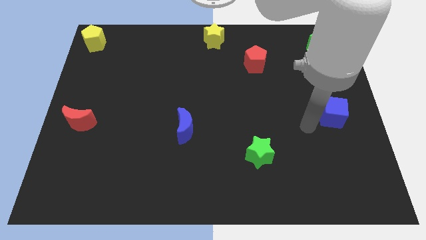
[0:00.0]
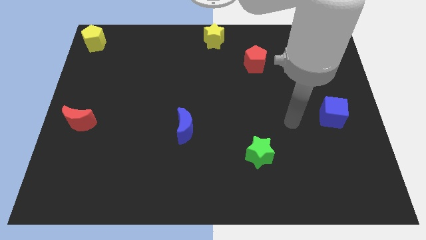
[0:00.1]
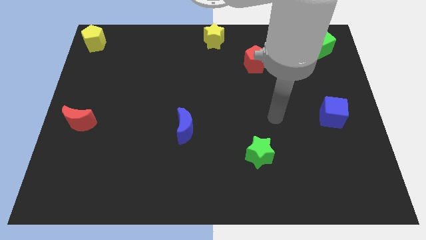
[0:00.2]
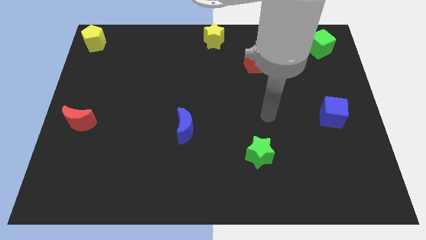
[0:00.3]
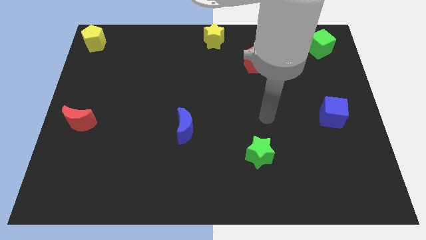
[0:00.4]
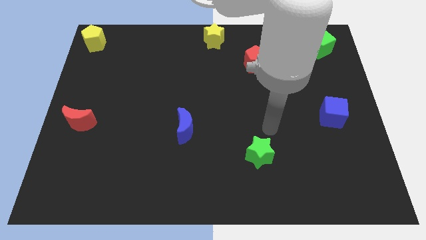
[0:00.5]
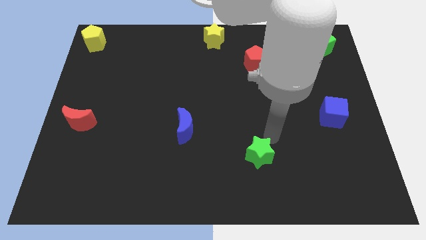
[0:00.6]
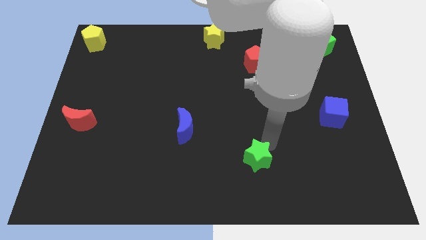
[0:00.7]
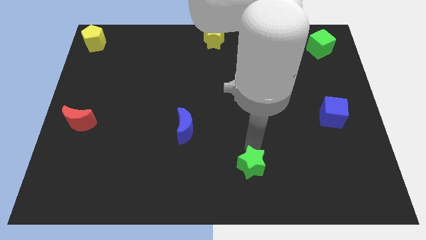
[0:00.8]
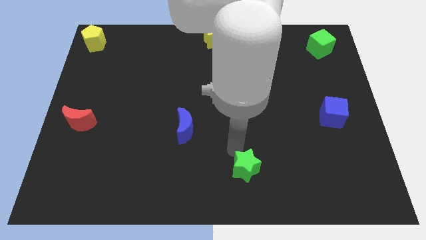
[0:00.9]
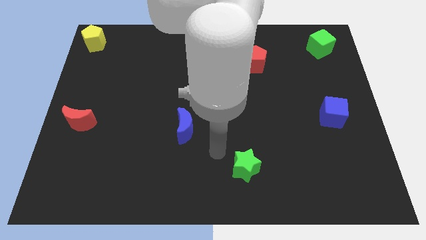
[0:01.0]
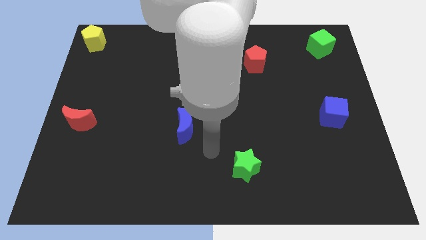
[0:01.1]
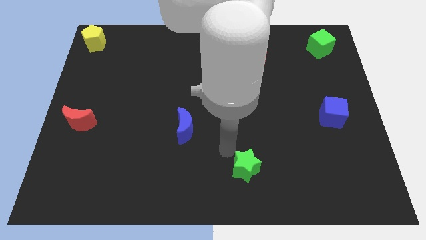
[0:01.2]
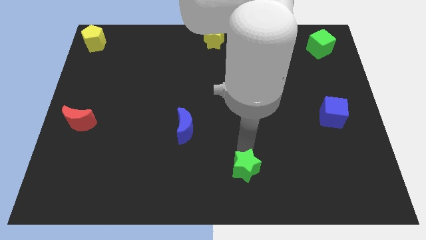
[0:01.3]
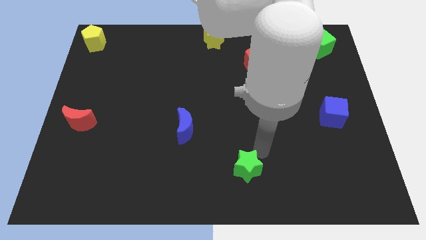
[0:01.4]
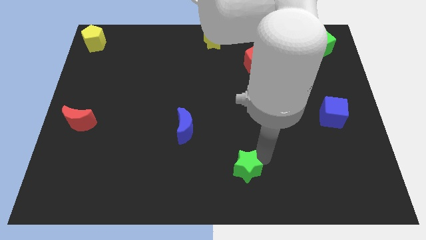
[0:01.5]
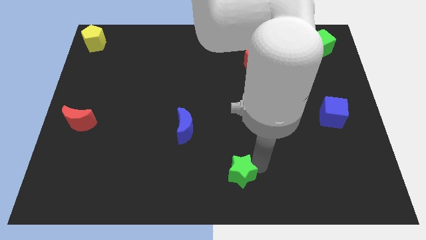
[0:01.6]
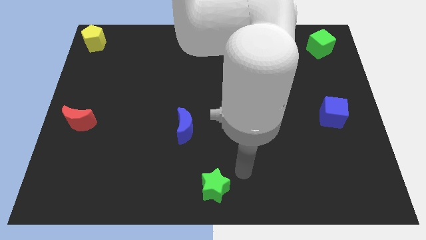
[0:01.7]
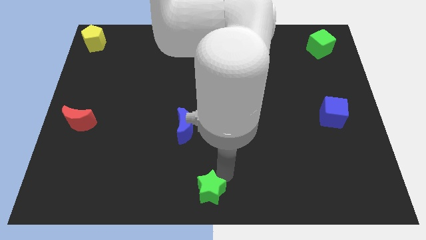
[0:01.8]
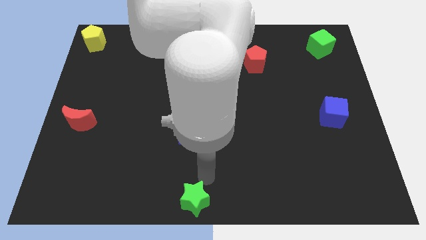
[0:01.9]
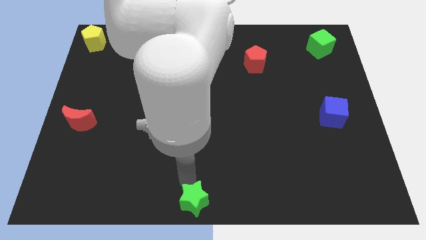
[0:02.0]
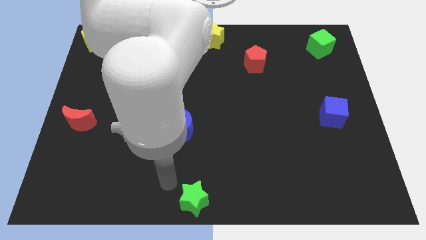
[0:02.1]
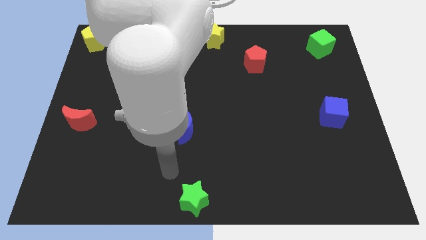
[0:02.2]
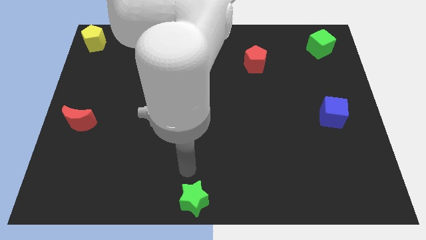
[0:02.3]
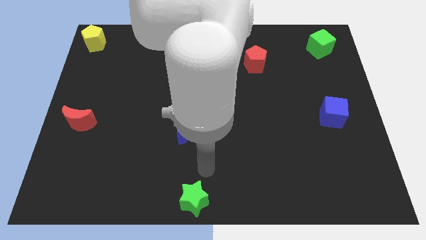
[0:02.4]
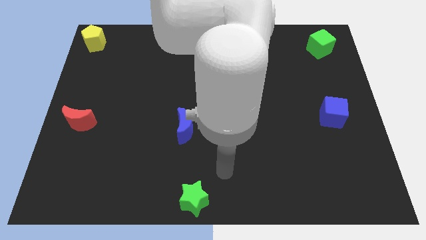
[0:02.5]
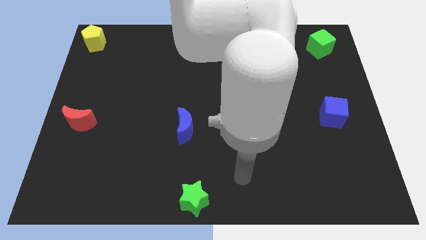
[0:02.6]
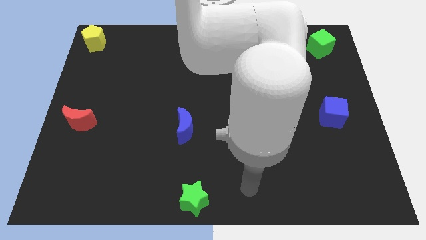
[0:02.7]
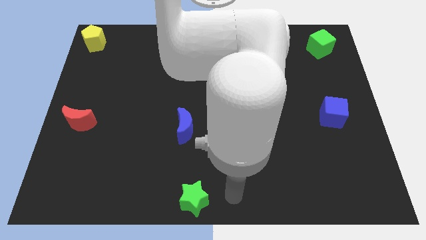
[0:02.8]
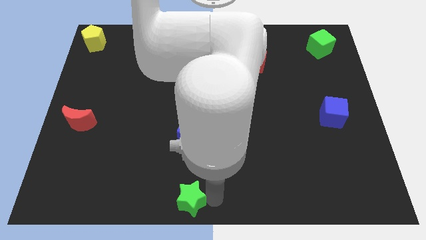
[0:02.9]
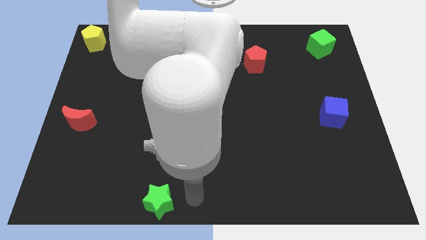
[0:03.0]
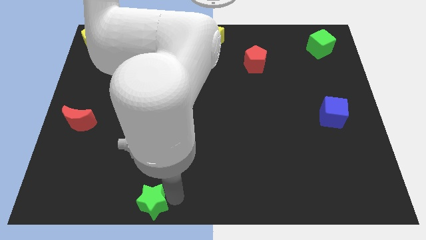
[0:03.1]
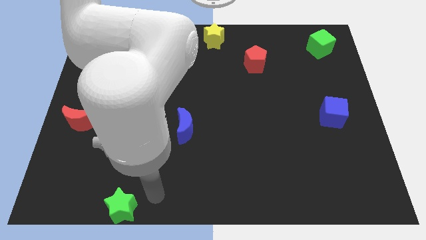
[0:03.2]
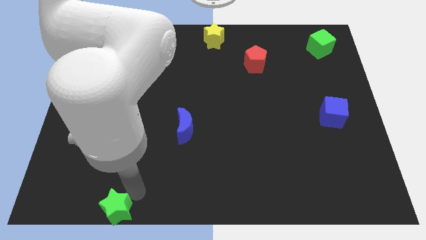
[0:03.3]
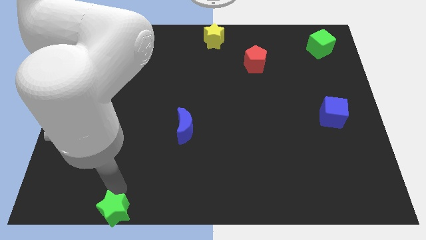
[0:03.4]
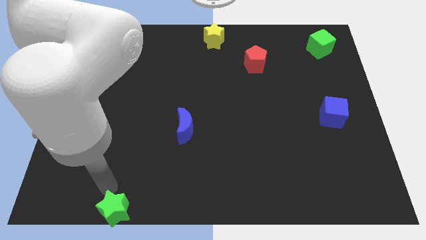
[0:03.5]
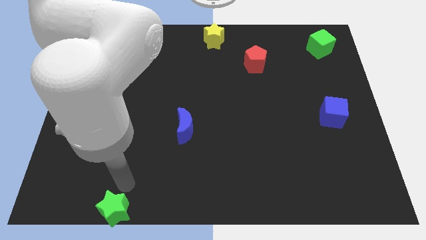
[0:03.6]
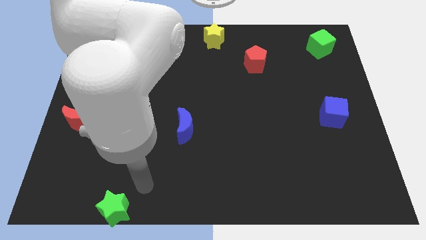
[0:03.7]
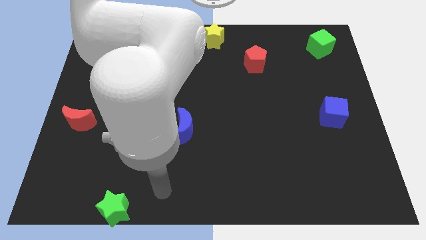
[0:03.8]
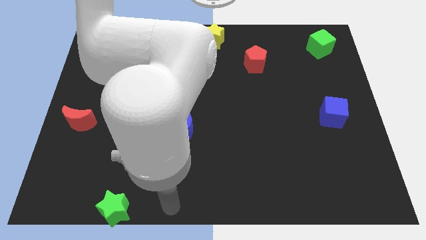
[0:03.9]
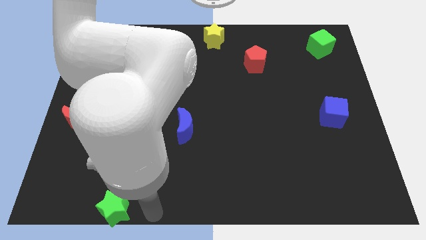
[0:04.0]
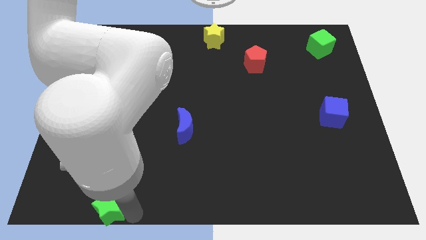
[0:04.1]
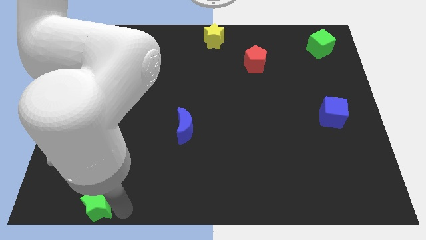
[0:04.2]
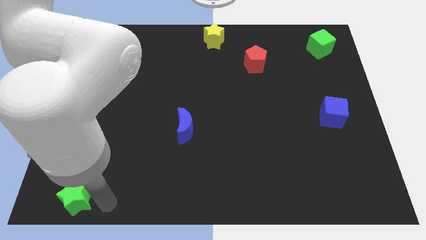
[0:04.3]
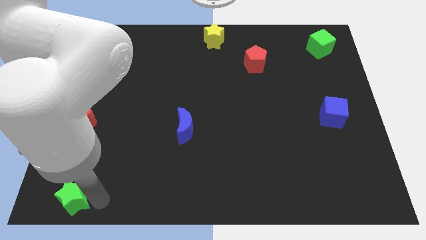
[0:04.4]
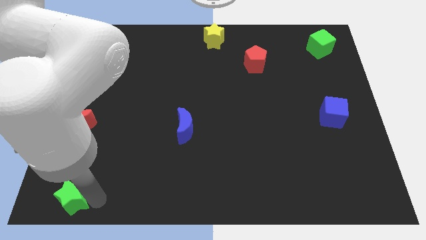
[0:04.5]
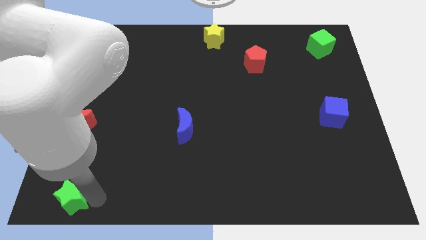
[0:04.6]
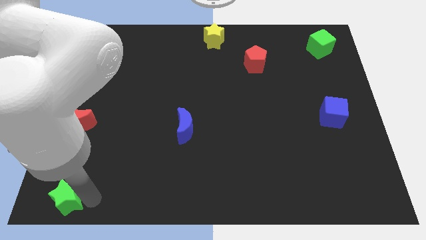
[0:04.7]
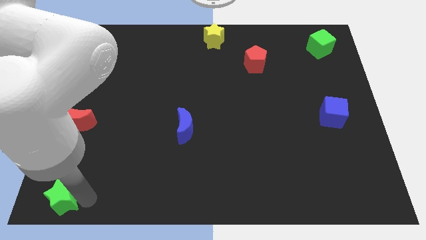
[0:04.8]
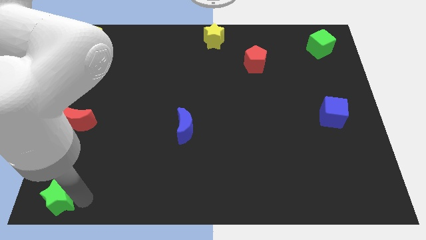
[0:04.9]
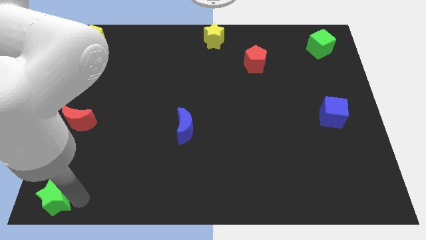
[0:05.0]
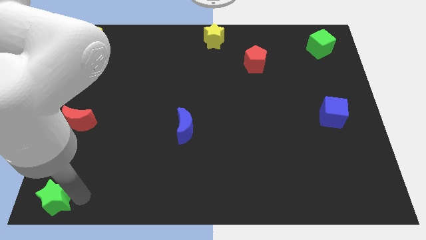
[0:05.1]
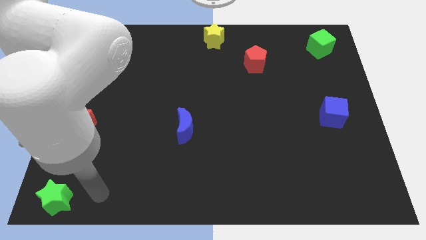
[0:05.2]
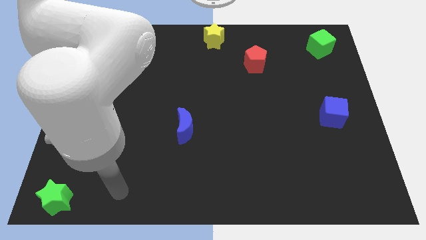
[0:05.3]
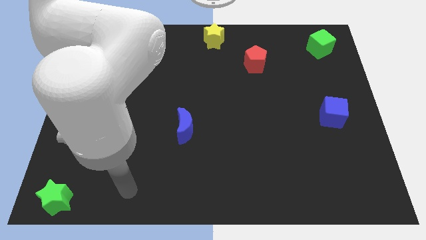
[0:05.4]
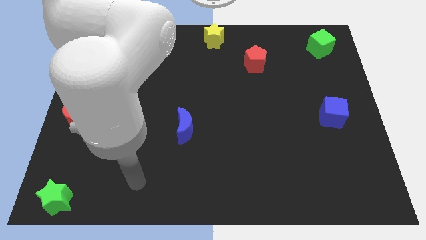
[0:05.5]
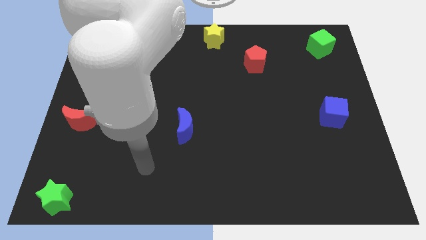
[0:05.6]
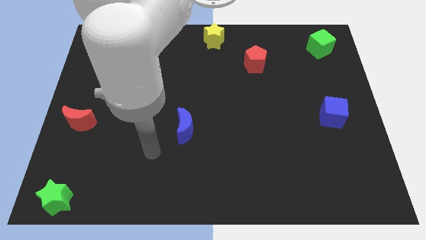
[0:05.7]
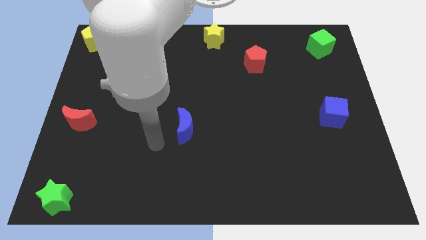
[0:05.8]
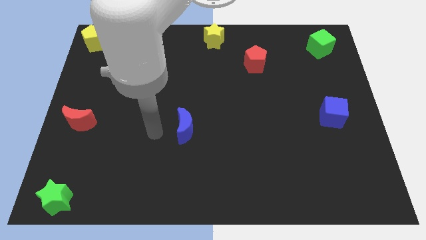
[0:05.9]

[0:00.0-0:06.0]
make a vertical line with the green star red crescent and yellow pentagon

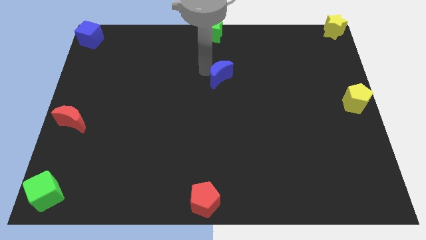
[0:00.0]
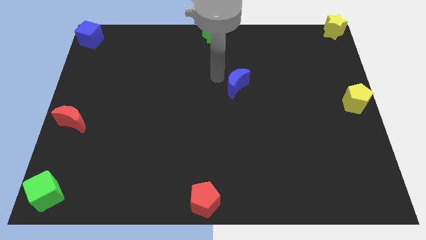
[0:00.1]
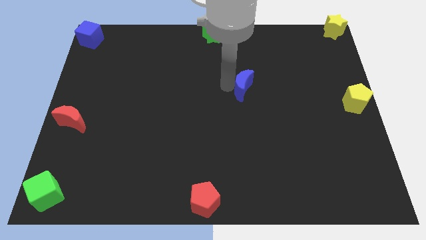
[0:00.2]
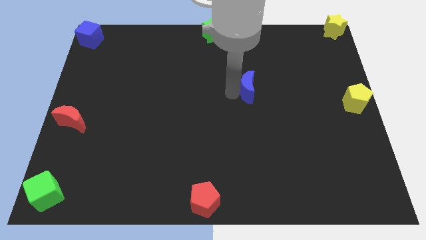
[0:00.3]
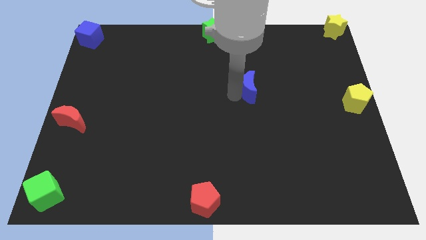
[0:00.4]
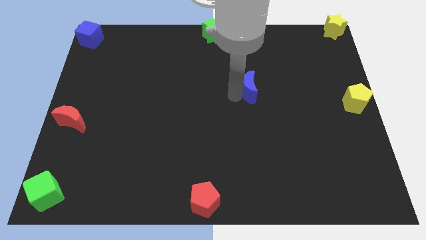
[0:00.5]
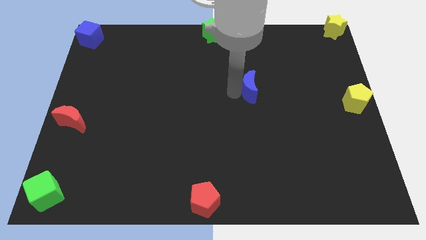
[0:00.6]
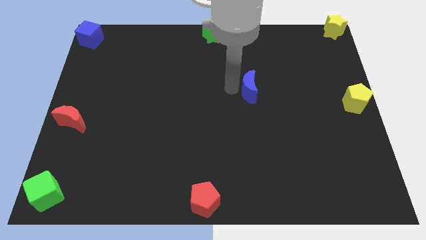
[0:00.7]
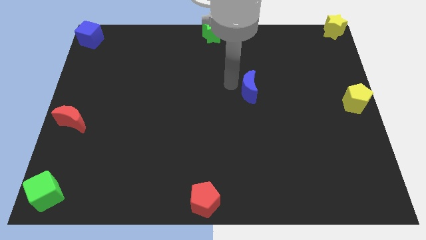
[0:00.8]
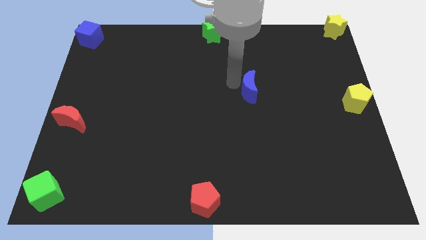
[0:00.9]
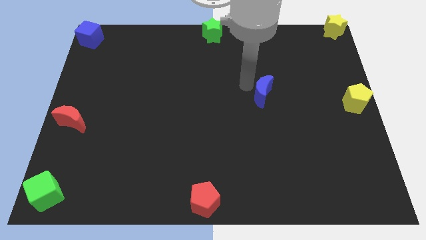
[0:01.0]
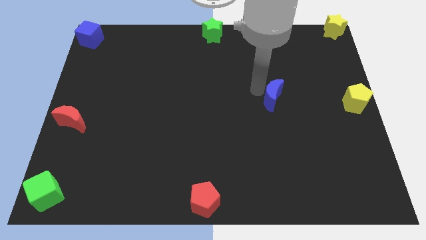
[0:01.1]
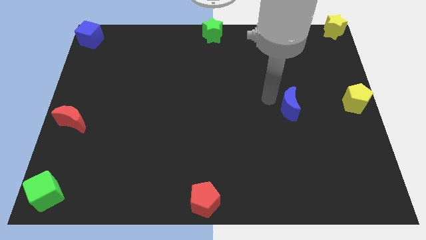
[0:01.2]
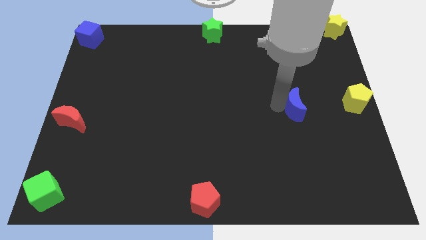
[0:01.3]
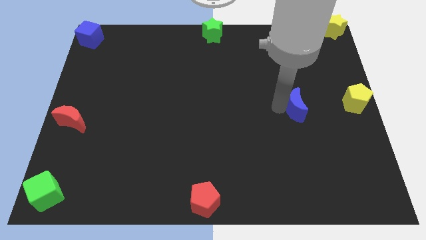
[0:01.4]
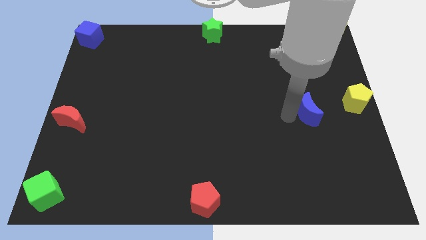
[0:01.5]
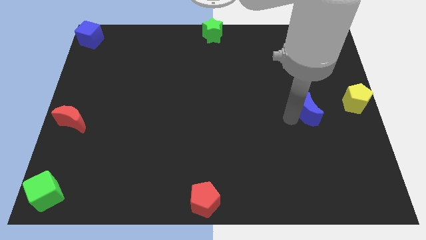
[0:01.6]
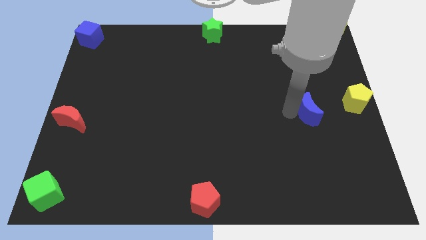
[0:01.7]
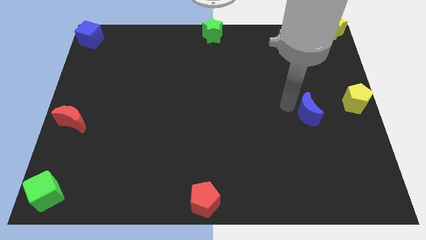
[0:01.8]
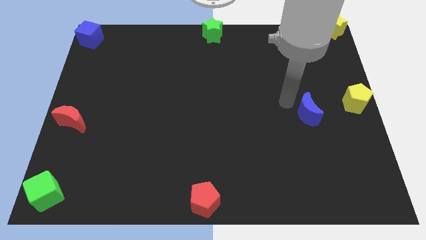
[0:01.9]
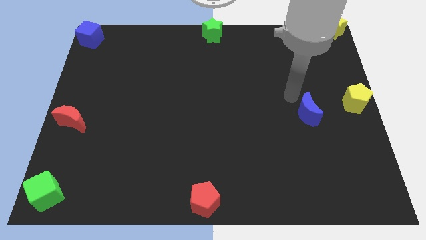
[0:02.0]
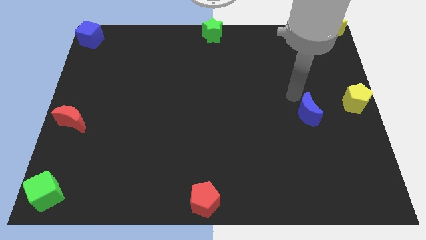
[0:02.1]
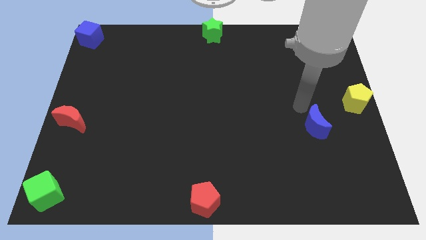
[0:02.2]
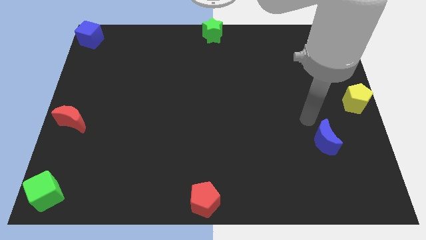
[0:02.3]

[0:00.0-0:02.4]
move the blue crescent vertical to the yellow pentagon

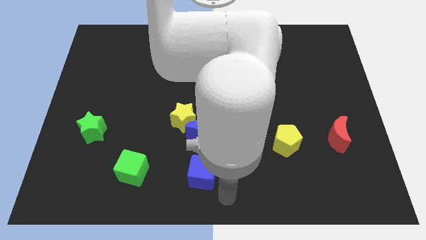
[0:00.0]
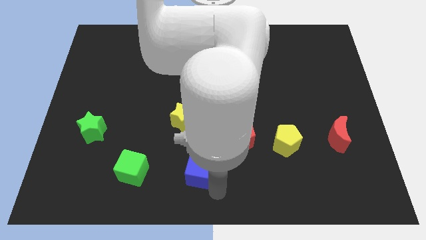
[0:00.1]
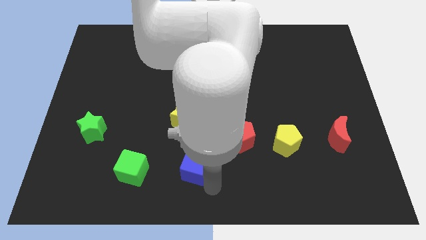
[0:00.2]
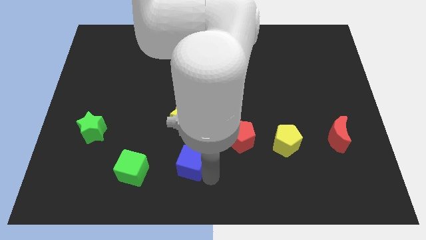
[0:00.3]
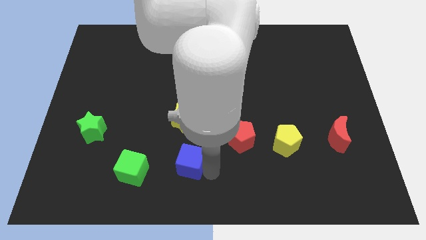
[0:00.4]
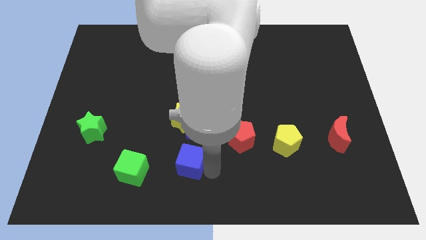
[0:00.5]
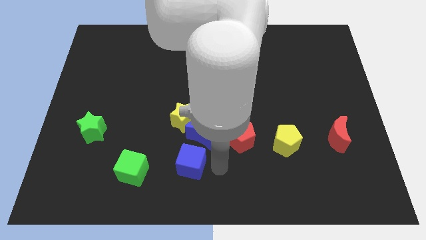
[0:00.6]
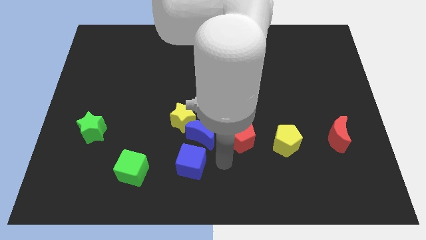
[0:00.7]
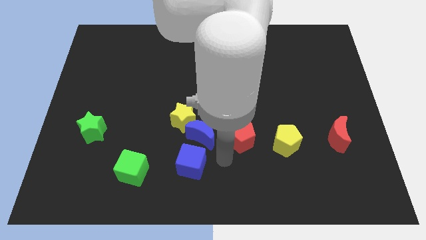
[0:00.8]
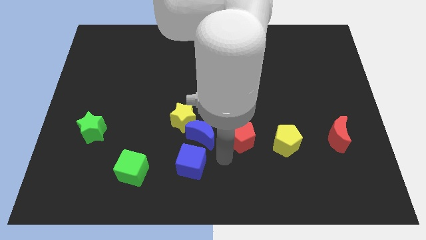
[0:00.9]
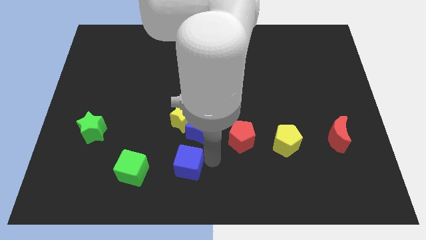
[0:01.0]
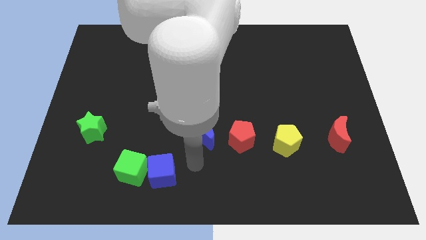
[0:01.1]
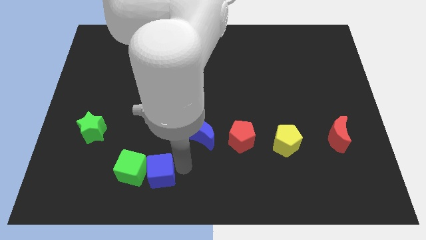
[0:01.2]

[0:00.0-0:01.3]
push the blue cube towards green cube
